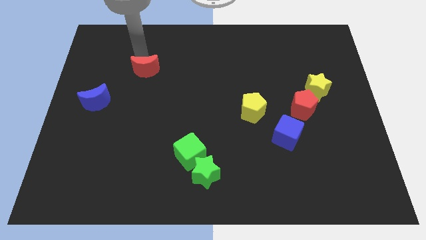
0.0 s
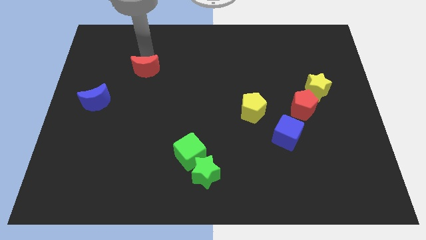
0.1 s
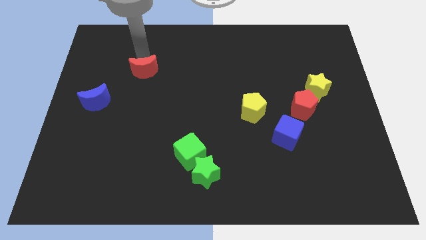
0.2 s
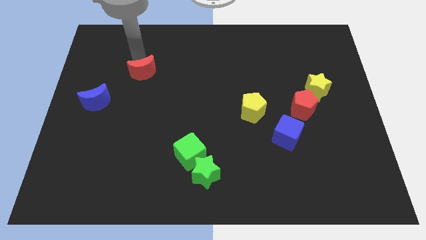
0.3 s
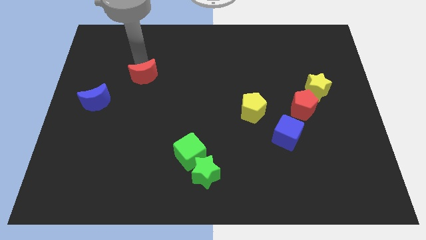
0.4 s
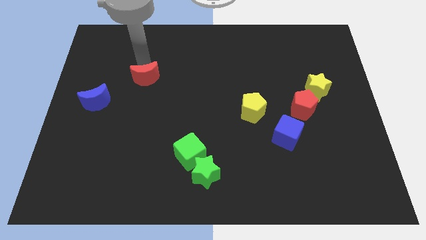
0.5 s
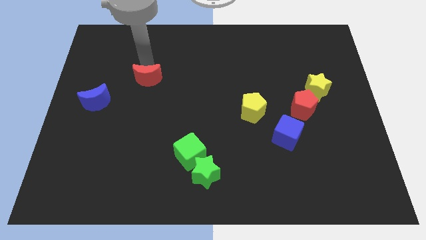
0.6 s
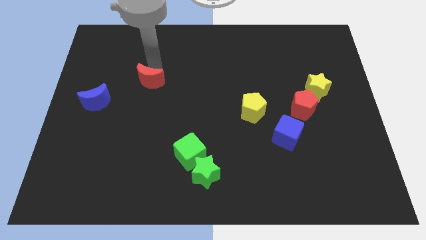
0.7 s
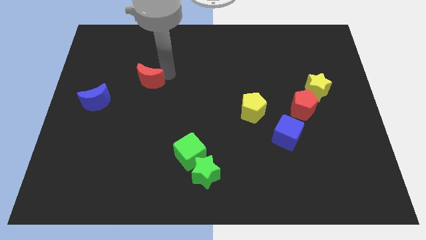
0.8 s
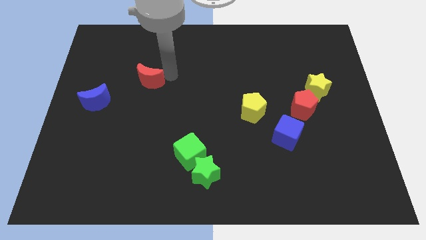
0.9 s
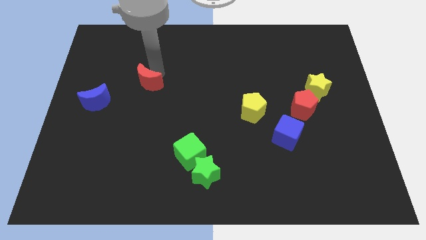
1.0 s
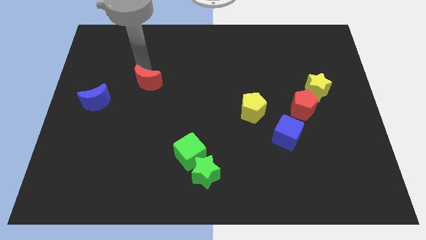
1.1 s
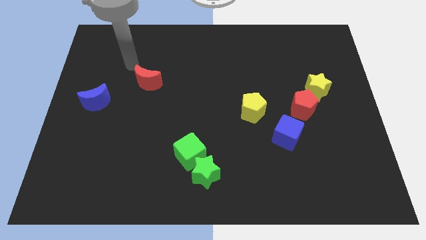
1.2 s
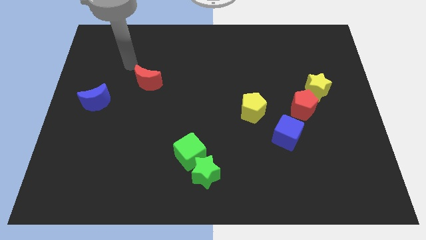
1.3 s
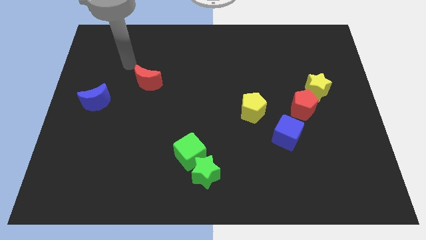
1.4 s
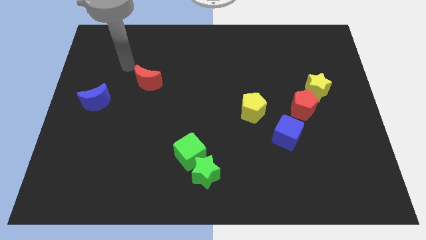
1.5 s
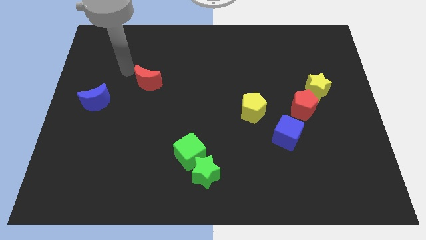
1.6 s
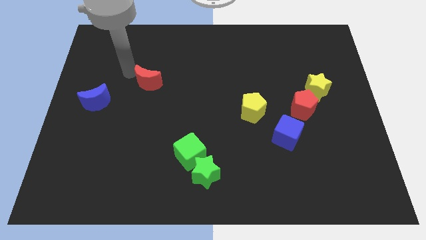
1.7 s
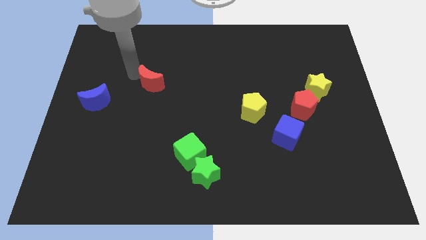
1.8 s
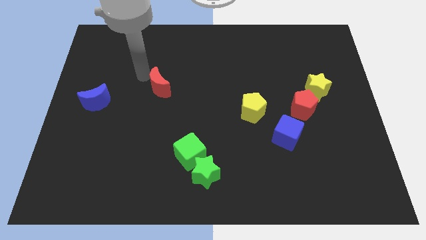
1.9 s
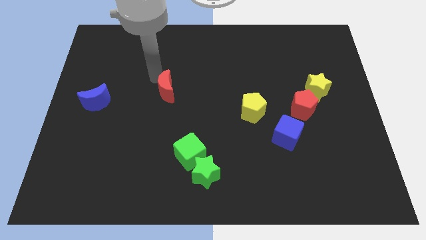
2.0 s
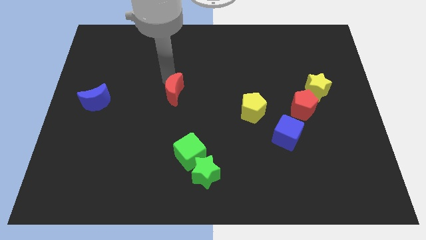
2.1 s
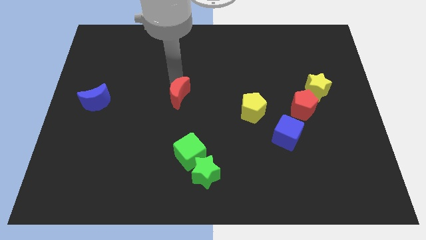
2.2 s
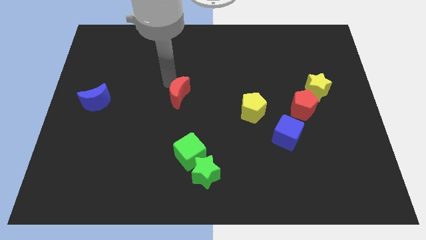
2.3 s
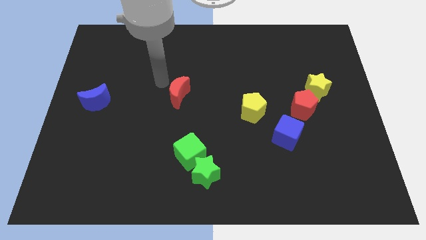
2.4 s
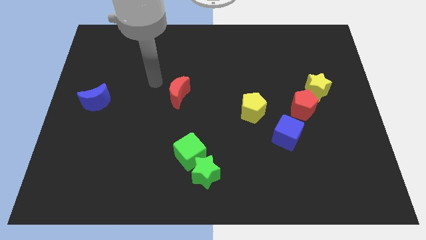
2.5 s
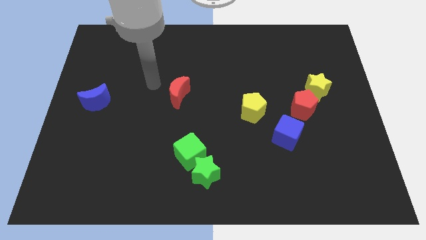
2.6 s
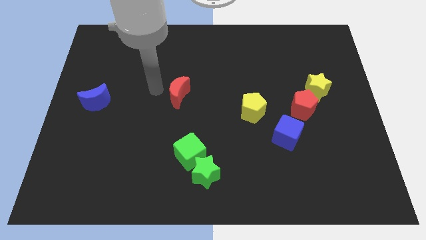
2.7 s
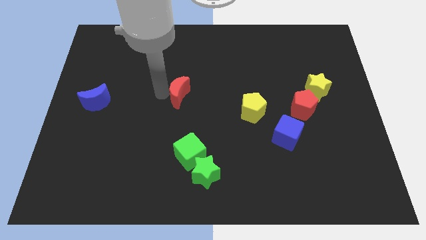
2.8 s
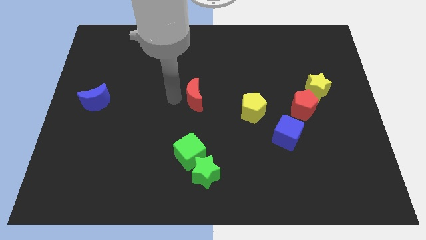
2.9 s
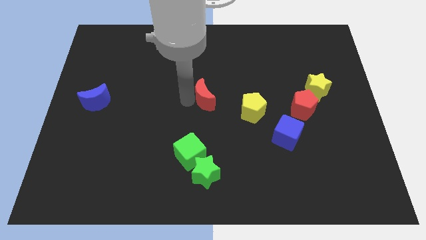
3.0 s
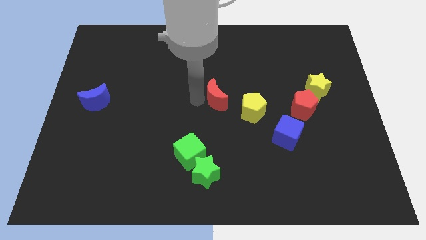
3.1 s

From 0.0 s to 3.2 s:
push the red moon parallel to the yellow pentagon

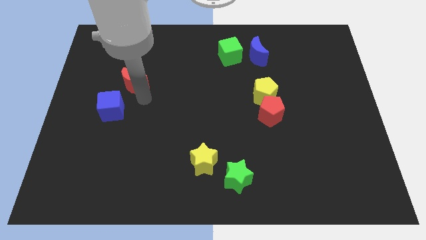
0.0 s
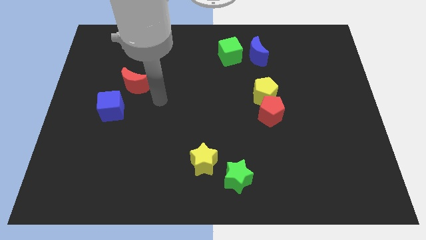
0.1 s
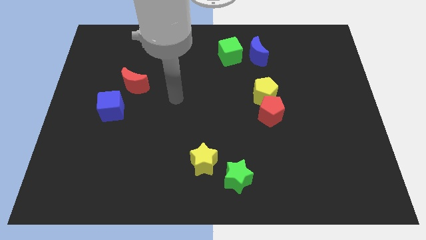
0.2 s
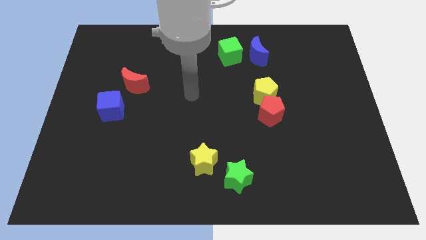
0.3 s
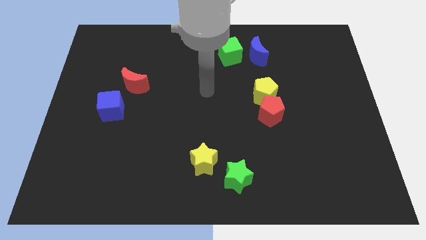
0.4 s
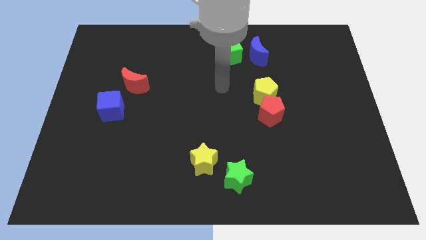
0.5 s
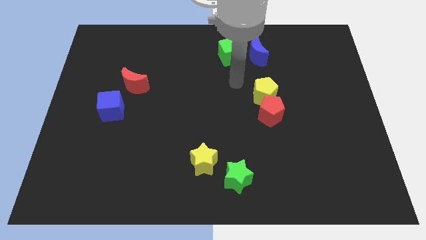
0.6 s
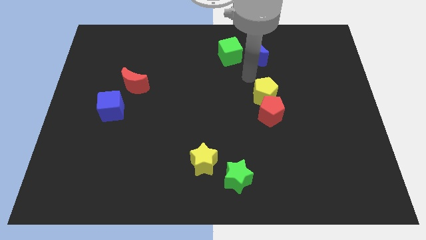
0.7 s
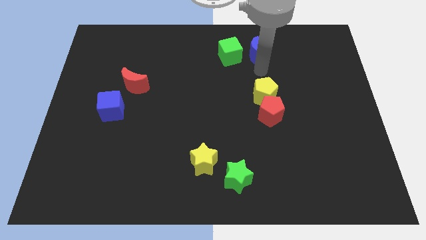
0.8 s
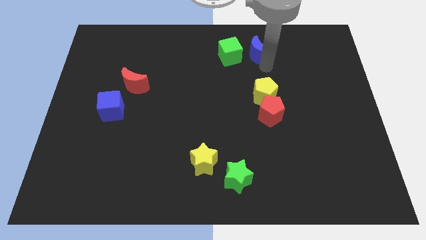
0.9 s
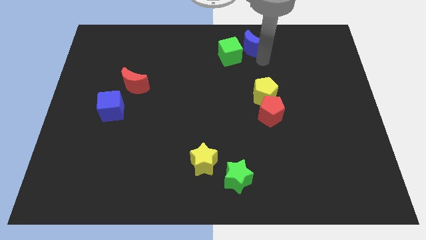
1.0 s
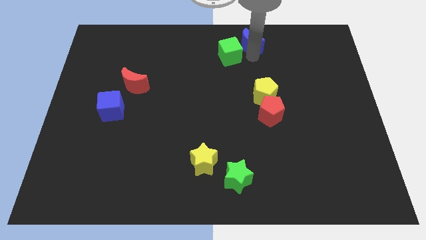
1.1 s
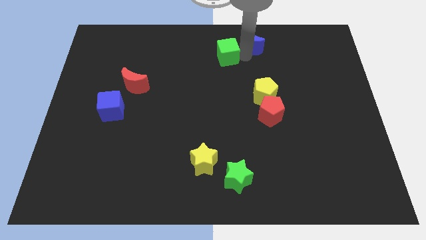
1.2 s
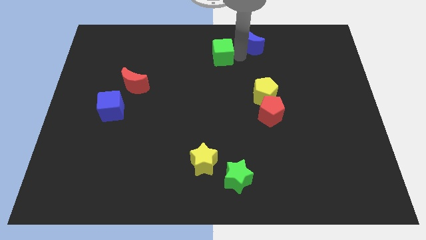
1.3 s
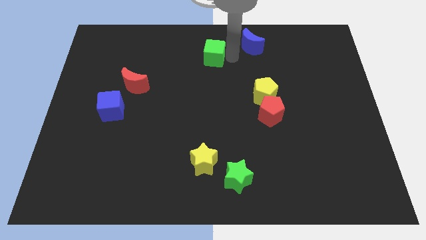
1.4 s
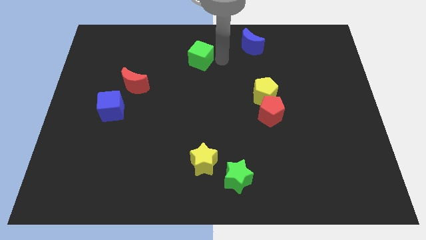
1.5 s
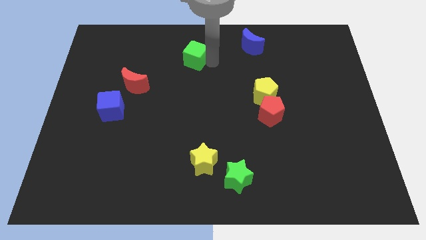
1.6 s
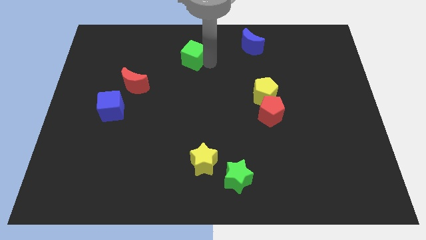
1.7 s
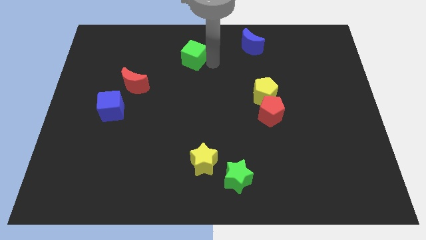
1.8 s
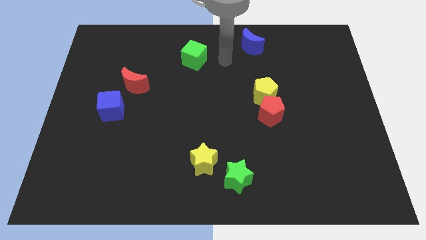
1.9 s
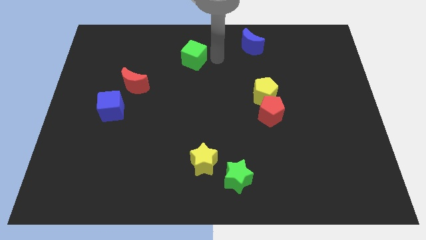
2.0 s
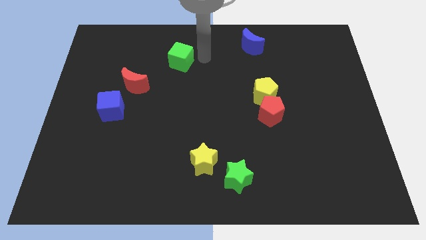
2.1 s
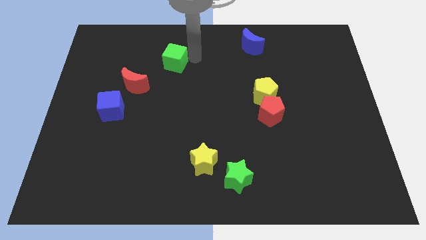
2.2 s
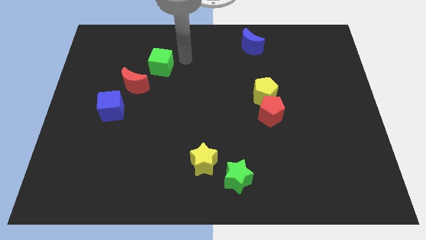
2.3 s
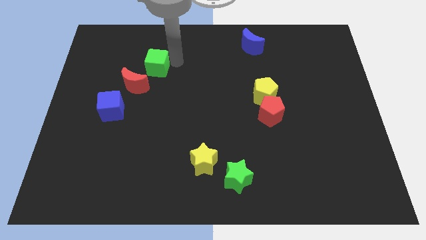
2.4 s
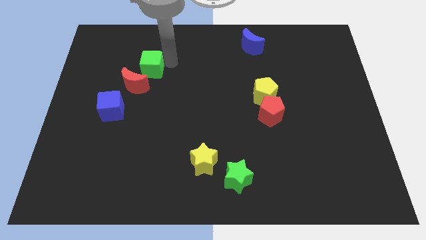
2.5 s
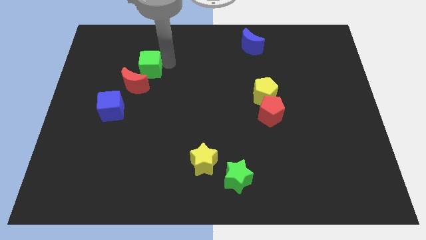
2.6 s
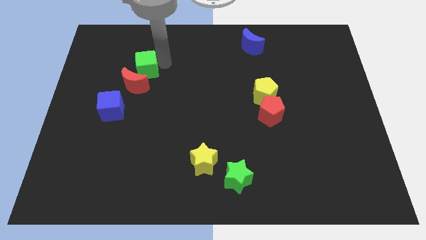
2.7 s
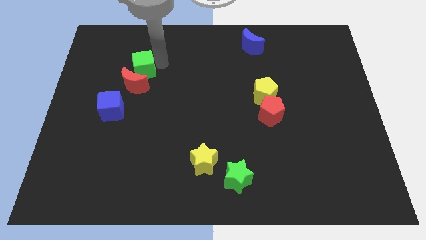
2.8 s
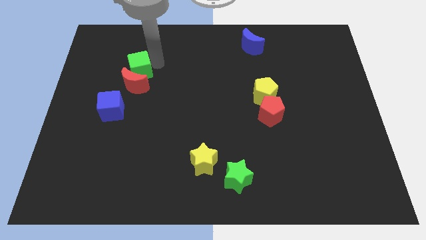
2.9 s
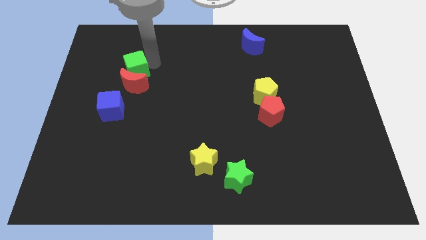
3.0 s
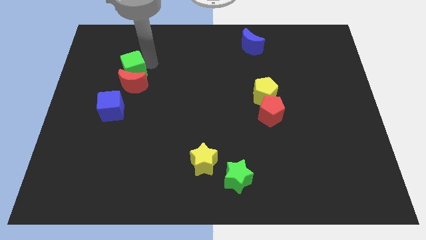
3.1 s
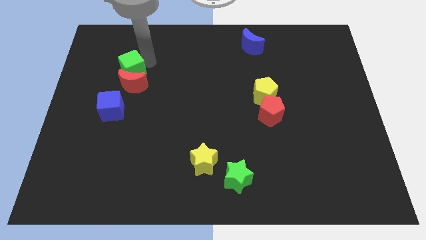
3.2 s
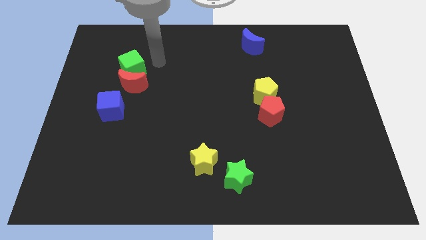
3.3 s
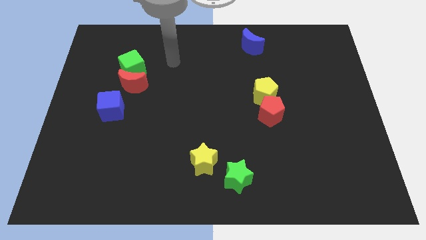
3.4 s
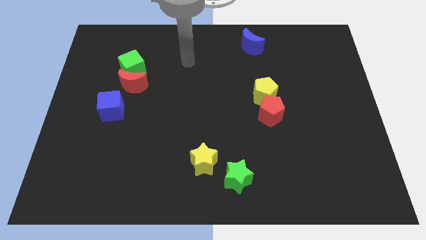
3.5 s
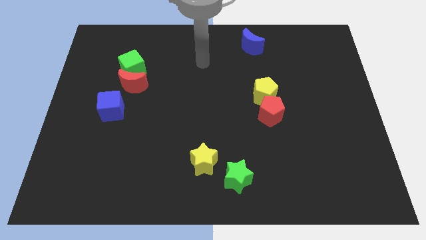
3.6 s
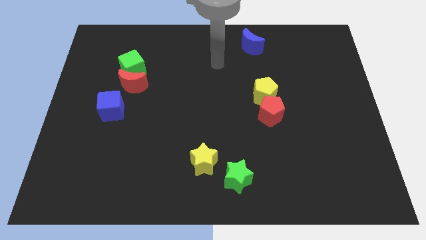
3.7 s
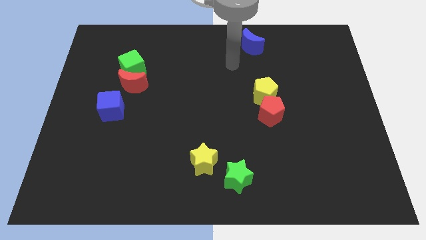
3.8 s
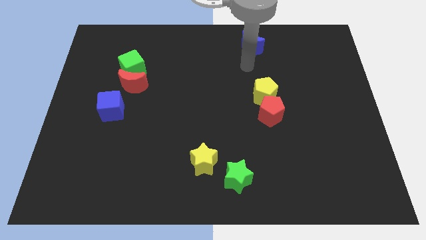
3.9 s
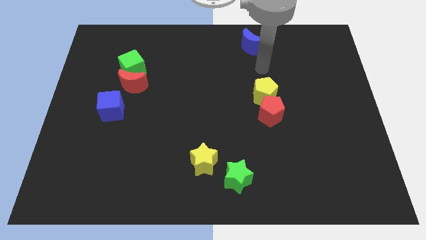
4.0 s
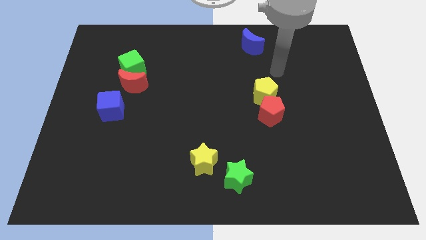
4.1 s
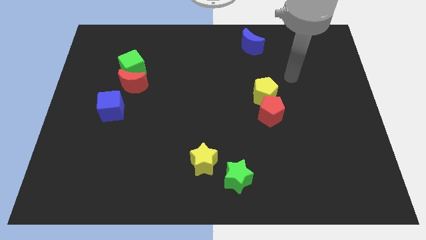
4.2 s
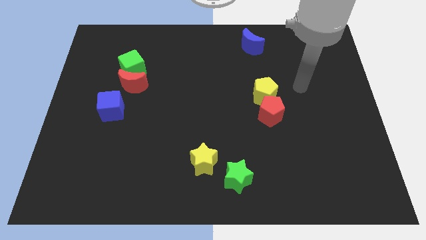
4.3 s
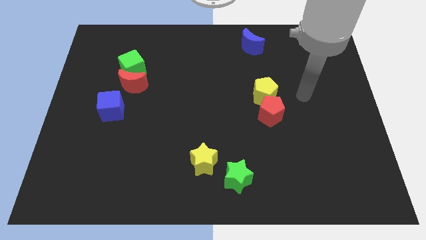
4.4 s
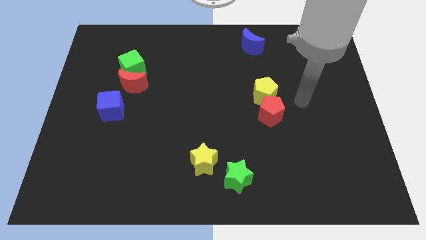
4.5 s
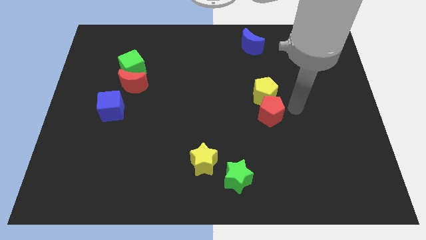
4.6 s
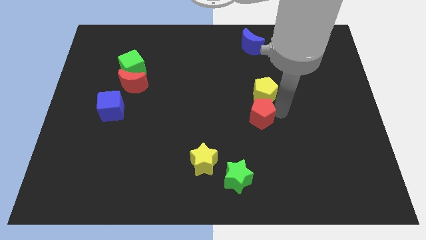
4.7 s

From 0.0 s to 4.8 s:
push the green cube to the left side of the board

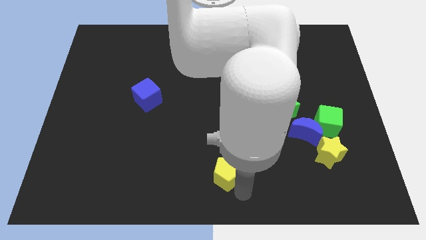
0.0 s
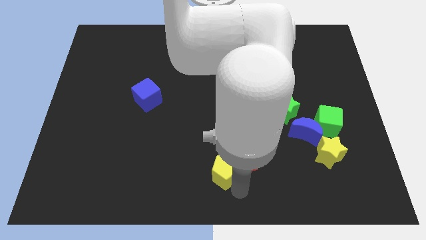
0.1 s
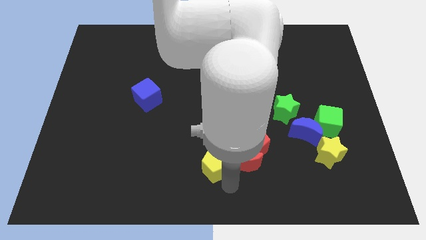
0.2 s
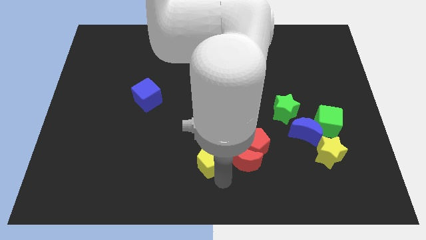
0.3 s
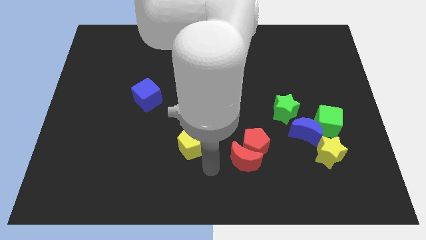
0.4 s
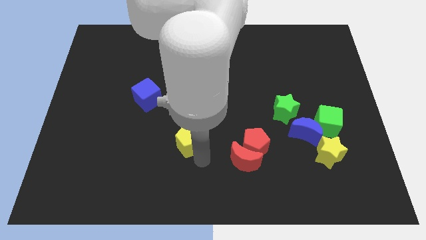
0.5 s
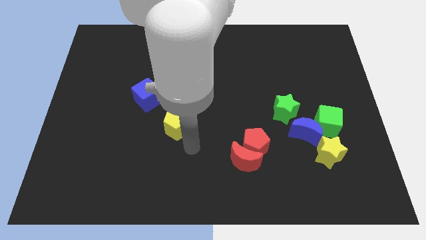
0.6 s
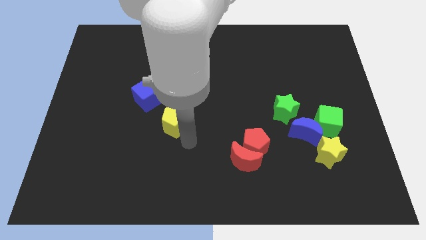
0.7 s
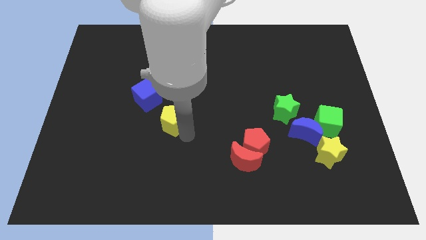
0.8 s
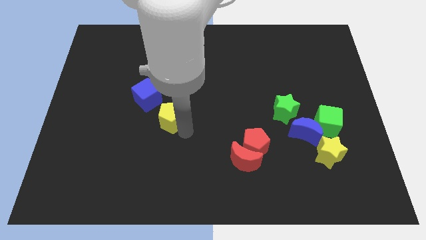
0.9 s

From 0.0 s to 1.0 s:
separate the yellow pentagon from the red crescent
